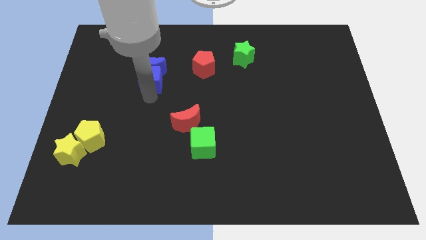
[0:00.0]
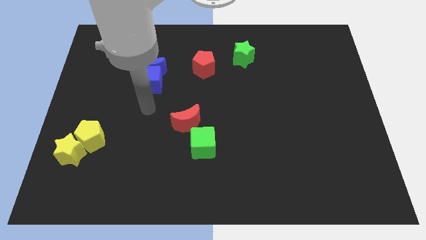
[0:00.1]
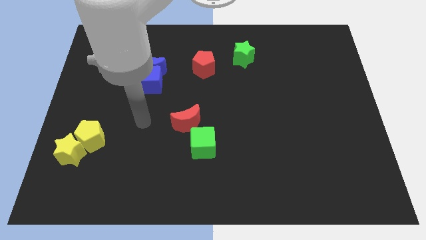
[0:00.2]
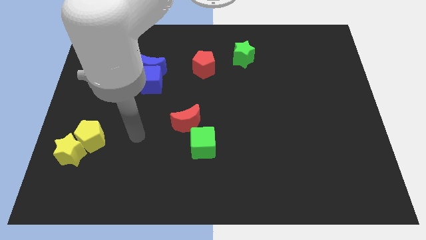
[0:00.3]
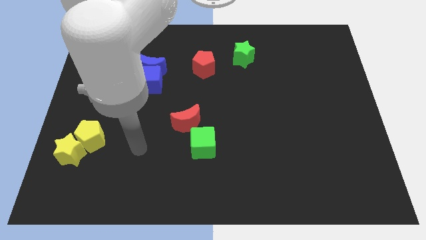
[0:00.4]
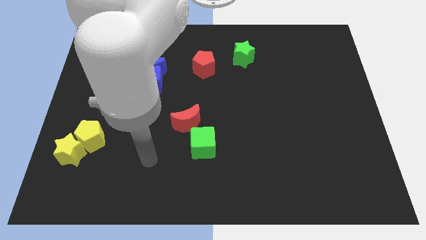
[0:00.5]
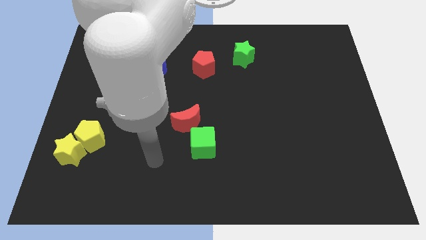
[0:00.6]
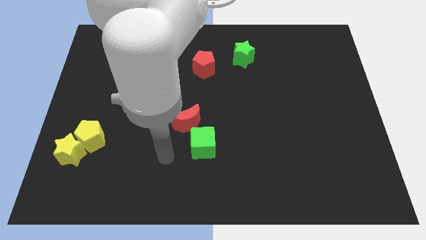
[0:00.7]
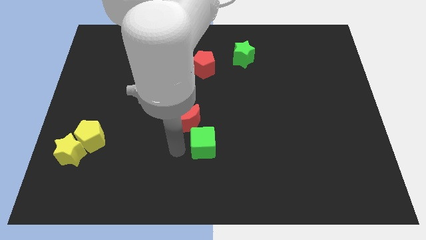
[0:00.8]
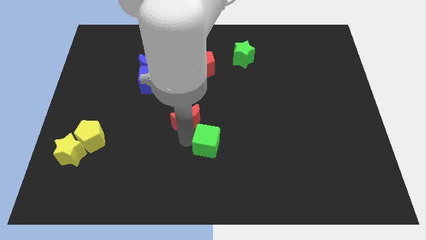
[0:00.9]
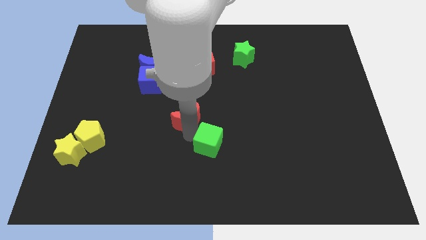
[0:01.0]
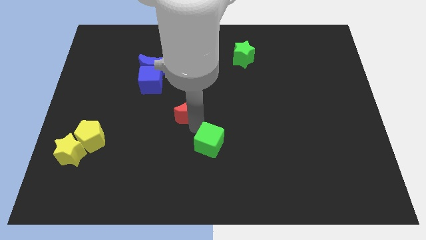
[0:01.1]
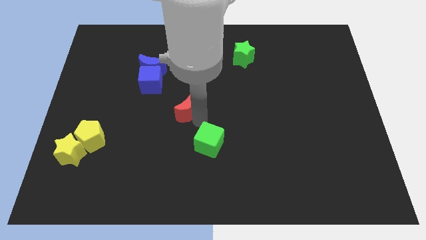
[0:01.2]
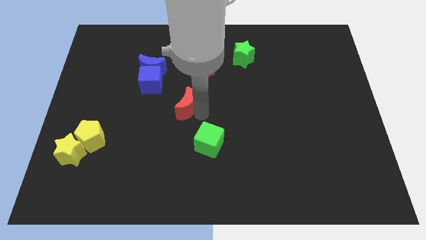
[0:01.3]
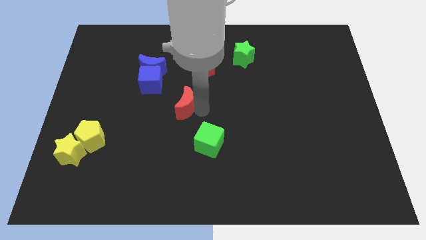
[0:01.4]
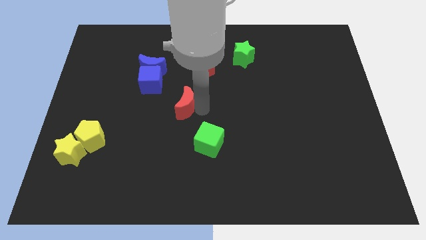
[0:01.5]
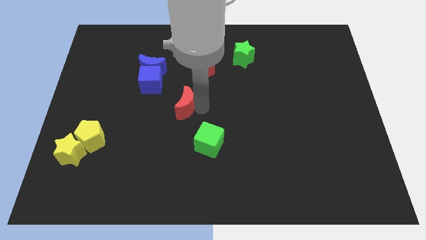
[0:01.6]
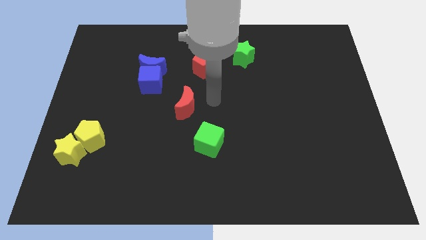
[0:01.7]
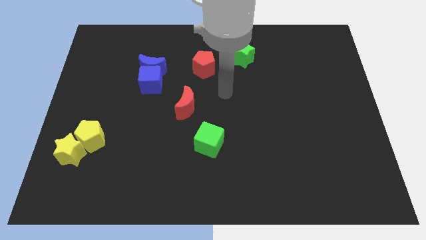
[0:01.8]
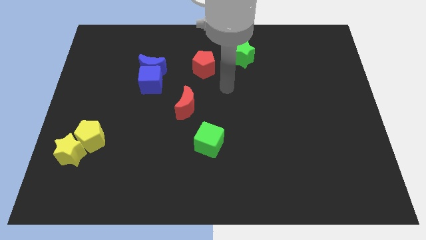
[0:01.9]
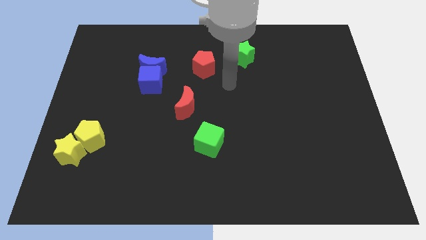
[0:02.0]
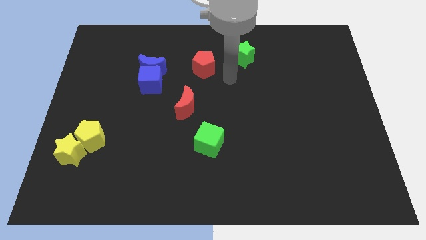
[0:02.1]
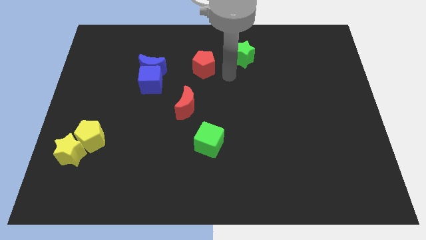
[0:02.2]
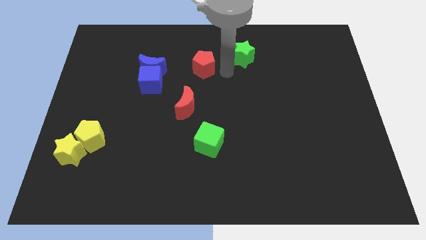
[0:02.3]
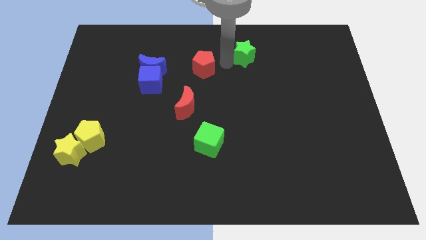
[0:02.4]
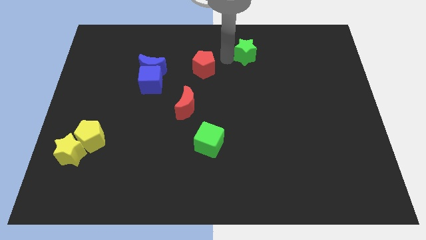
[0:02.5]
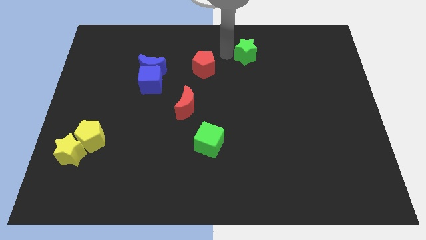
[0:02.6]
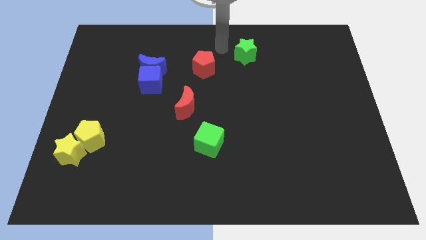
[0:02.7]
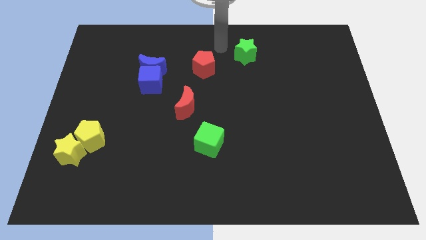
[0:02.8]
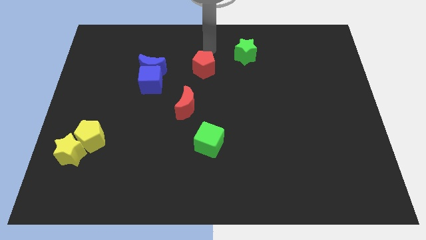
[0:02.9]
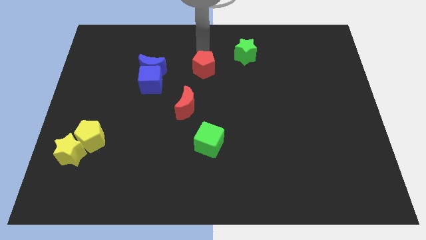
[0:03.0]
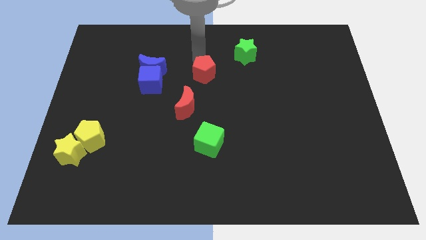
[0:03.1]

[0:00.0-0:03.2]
move your arm to the top center of the board

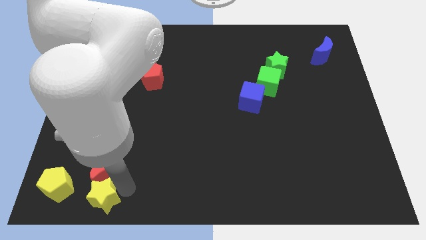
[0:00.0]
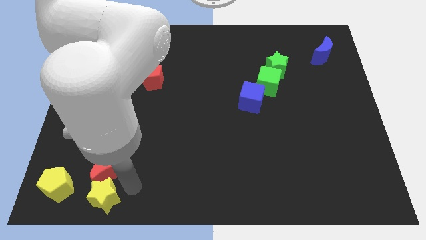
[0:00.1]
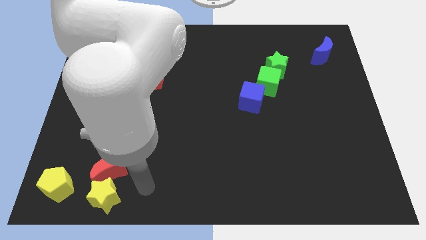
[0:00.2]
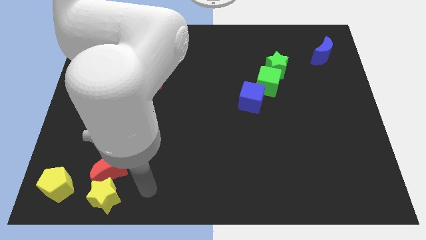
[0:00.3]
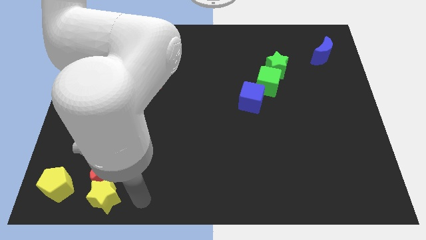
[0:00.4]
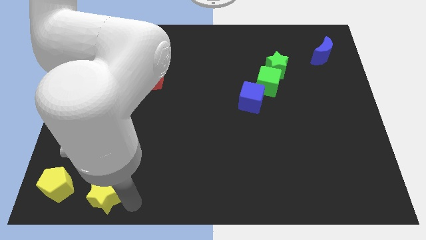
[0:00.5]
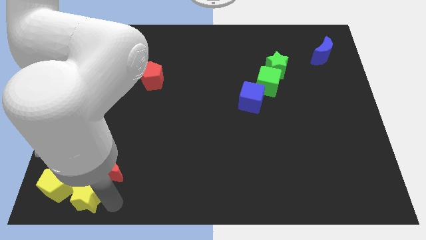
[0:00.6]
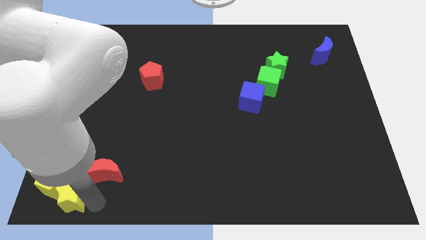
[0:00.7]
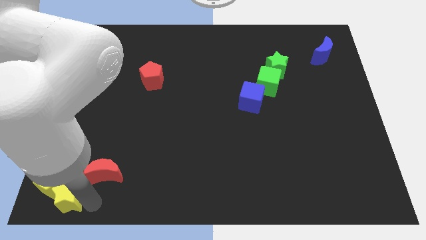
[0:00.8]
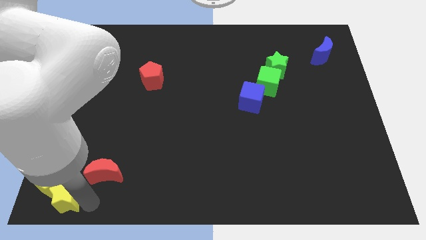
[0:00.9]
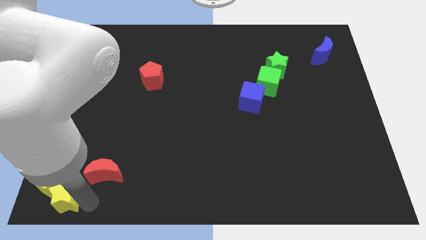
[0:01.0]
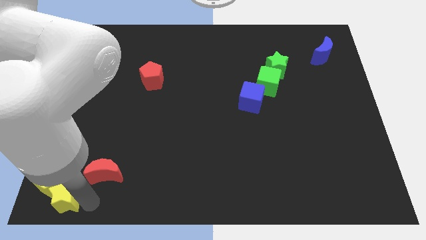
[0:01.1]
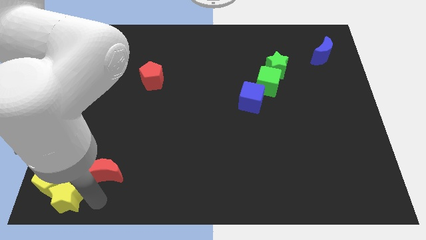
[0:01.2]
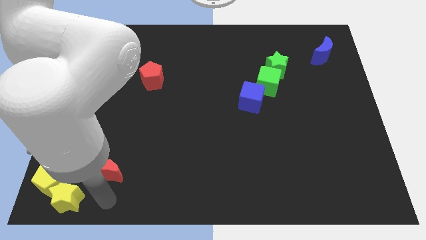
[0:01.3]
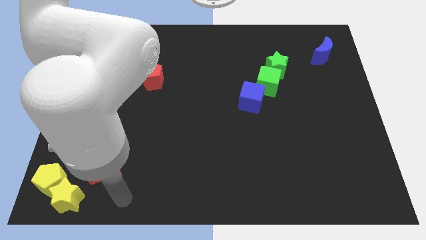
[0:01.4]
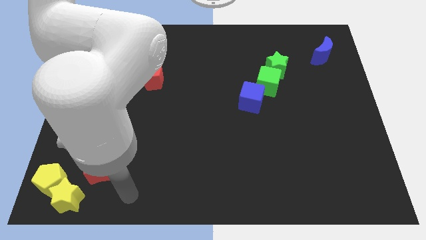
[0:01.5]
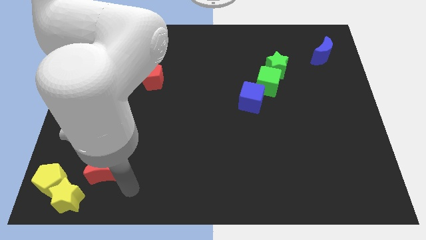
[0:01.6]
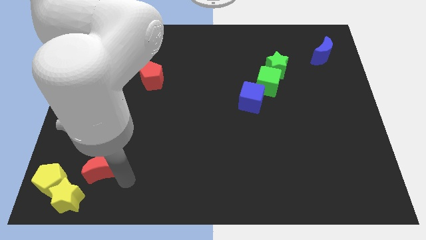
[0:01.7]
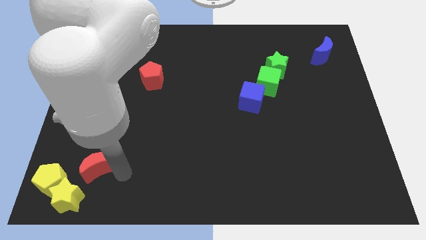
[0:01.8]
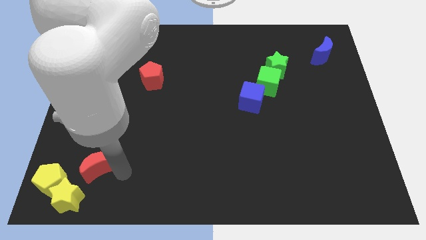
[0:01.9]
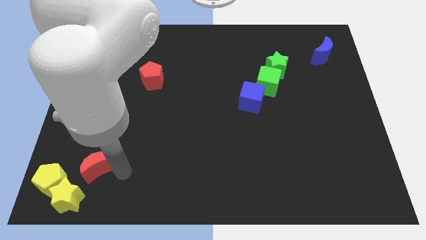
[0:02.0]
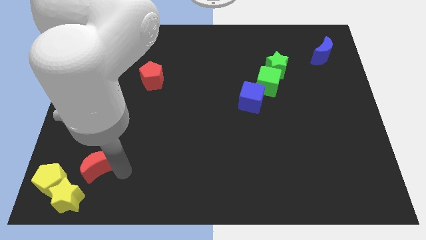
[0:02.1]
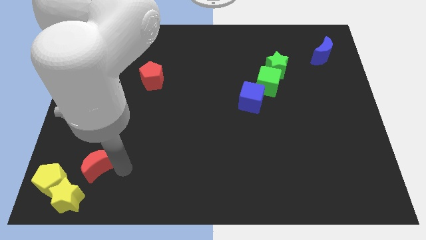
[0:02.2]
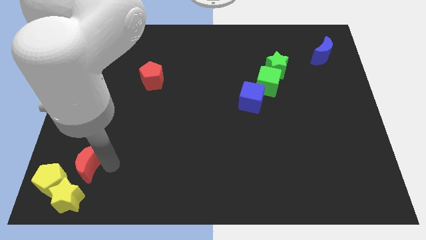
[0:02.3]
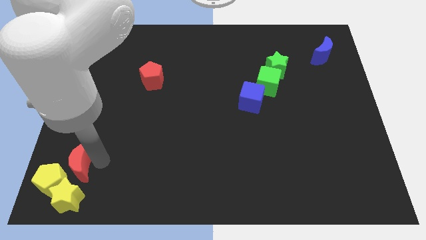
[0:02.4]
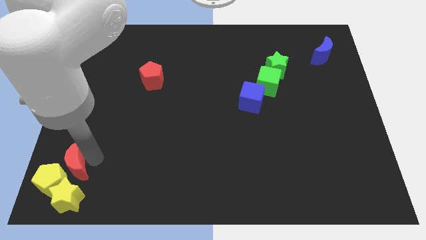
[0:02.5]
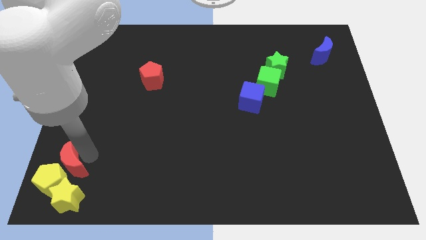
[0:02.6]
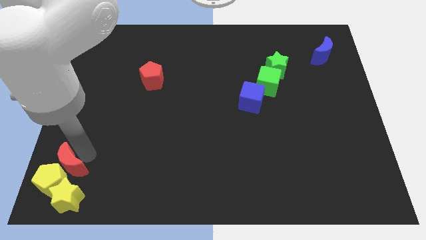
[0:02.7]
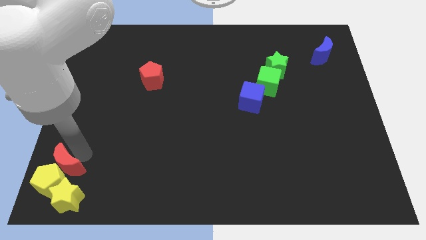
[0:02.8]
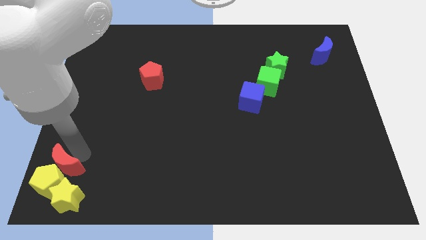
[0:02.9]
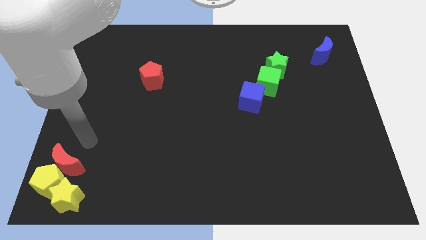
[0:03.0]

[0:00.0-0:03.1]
push the red crescent to the top of the yellow pentagon

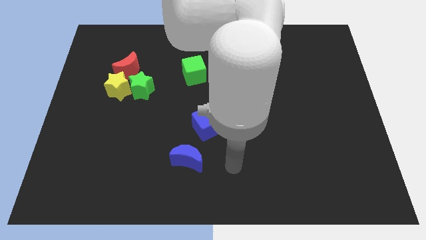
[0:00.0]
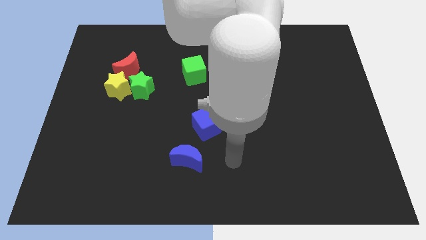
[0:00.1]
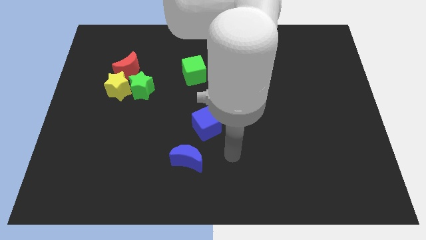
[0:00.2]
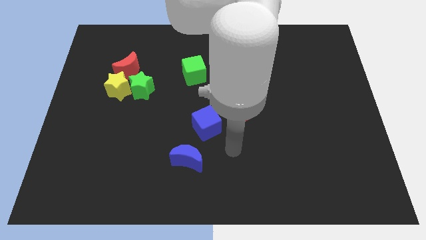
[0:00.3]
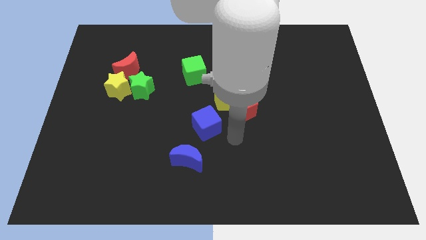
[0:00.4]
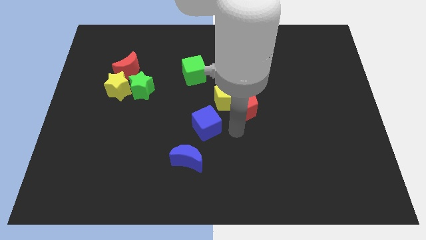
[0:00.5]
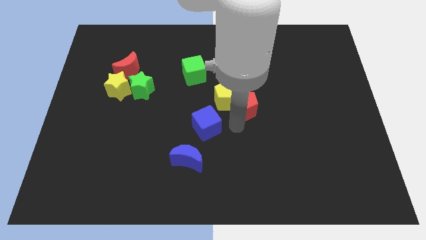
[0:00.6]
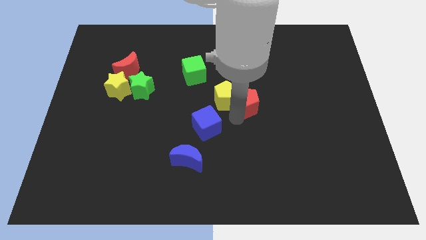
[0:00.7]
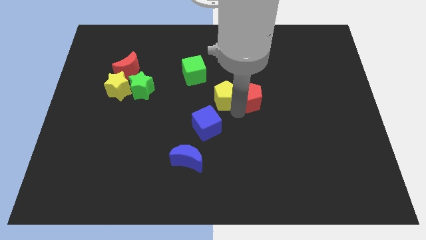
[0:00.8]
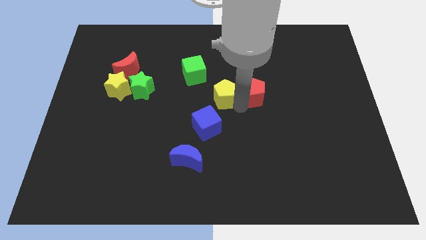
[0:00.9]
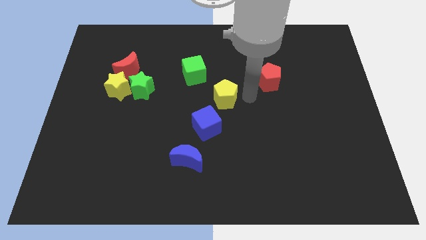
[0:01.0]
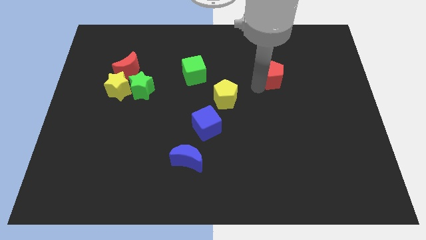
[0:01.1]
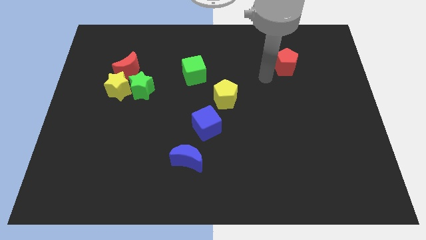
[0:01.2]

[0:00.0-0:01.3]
push red pentagon towards the top of the board

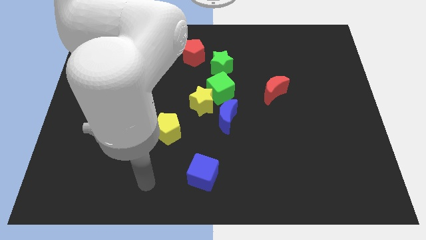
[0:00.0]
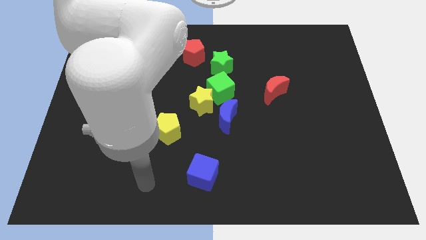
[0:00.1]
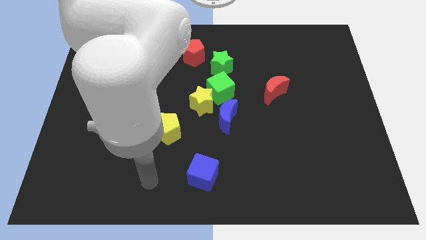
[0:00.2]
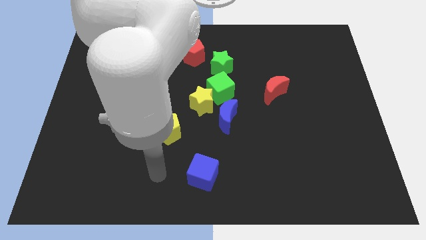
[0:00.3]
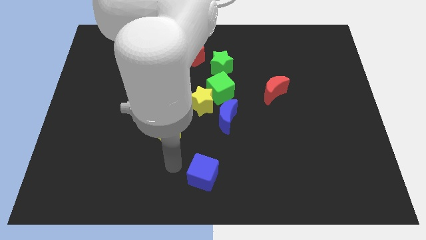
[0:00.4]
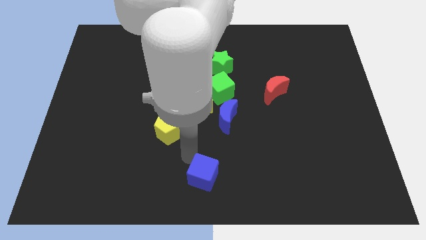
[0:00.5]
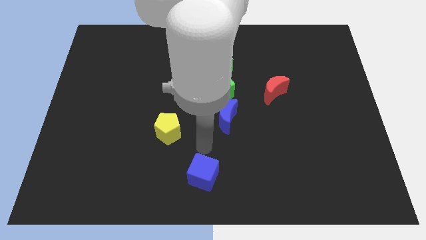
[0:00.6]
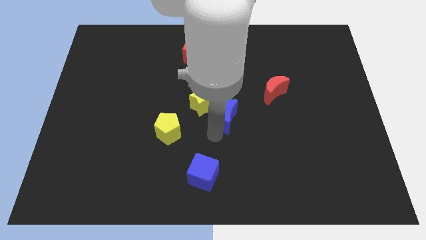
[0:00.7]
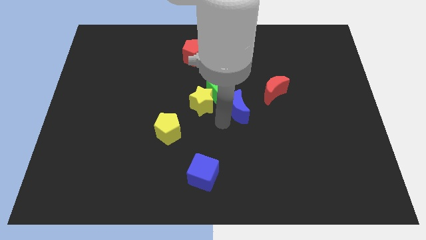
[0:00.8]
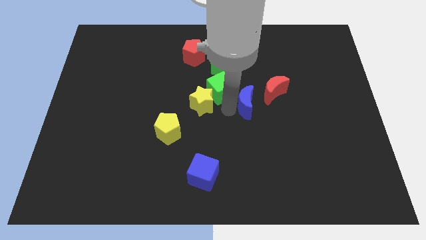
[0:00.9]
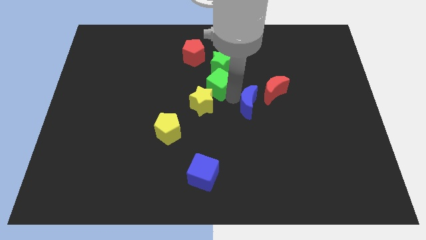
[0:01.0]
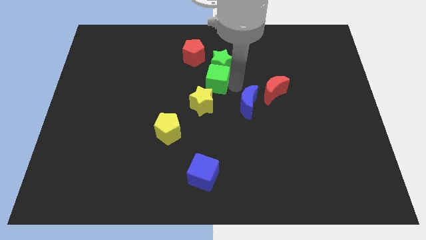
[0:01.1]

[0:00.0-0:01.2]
move the blue moon close to the red moon

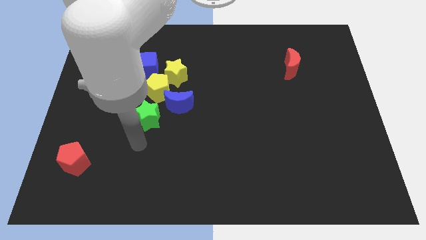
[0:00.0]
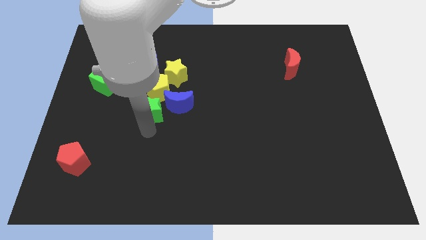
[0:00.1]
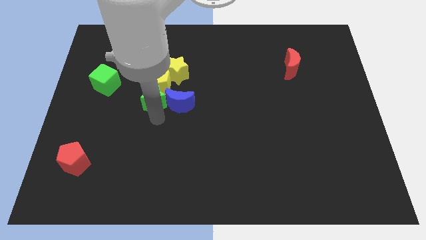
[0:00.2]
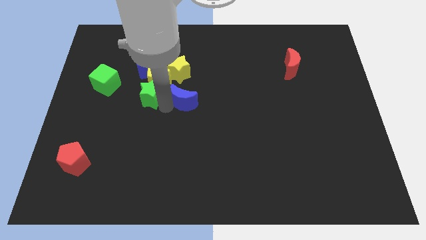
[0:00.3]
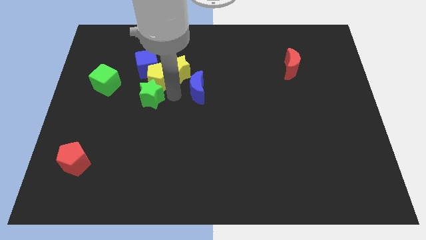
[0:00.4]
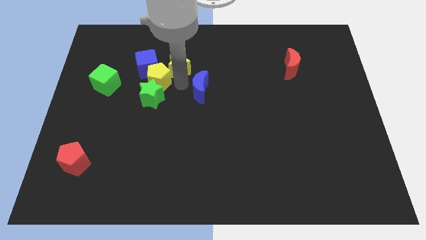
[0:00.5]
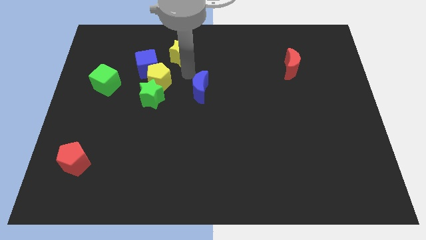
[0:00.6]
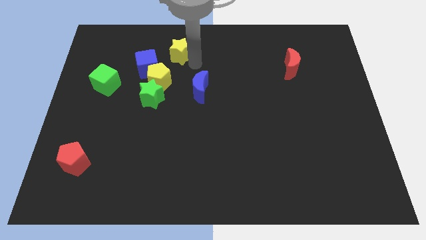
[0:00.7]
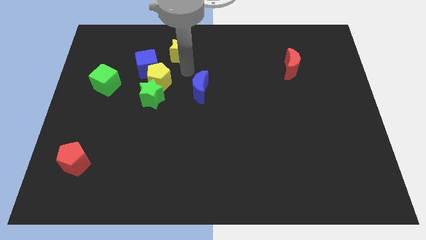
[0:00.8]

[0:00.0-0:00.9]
push the green star into the yellow pentagon
